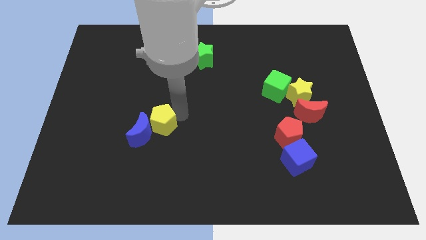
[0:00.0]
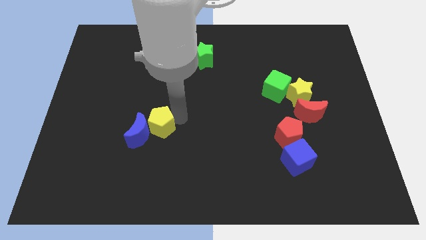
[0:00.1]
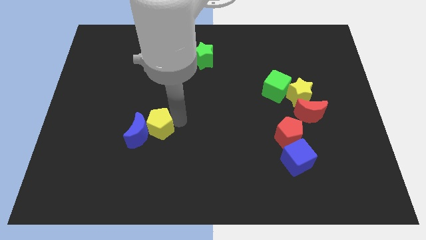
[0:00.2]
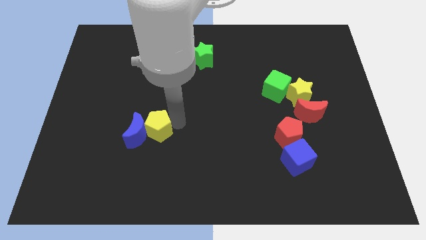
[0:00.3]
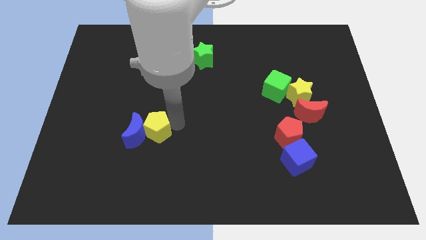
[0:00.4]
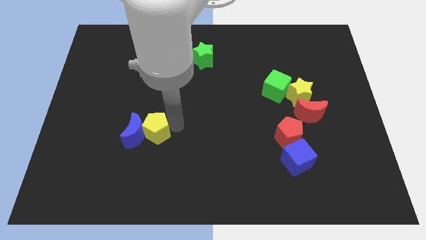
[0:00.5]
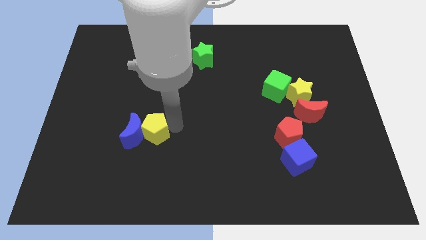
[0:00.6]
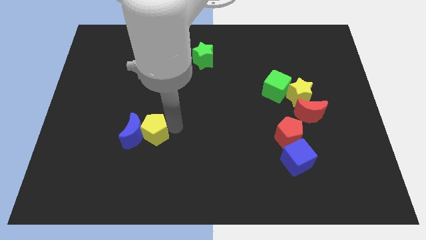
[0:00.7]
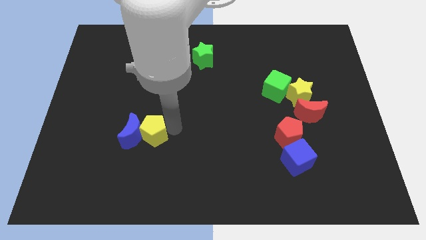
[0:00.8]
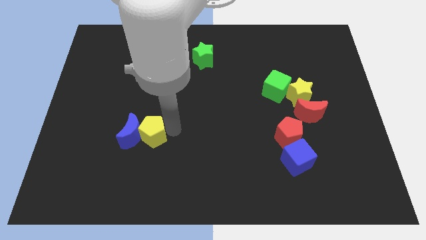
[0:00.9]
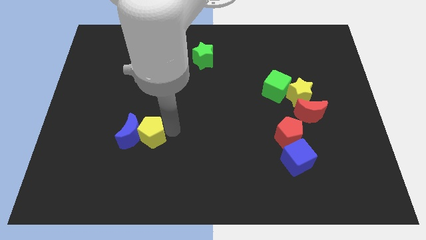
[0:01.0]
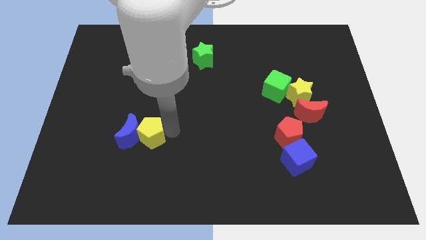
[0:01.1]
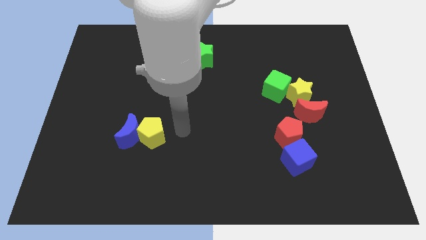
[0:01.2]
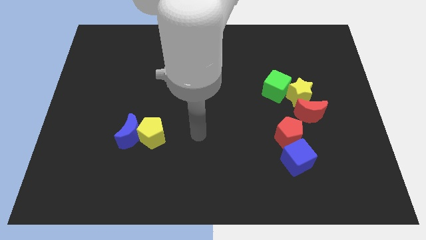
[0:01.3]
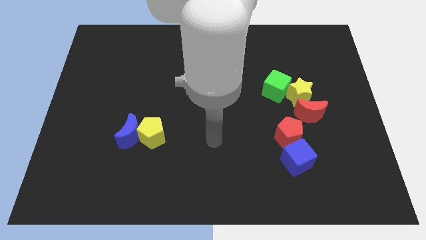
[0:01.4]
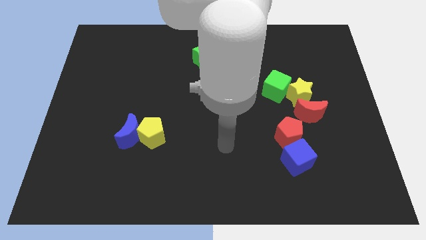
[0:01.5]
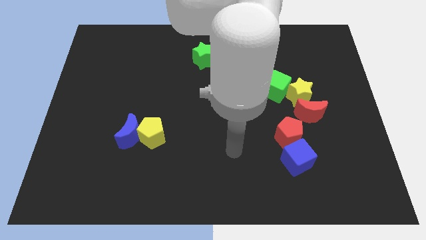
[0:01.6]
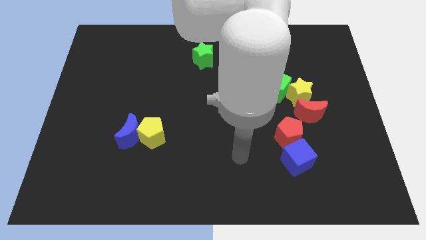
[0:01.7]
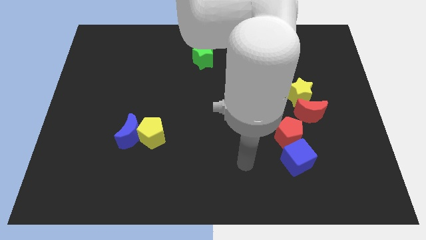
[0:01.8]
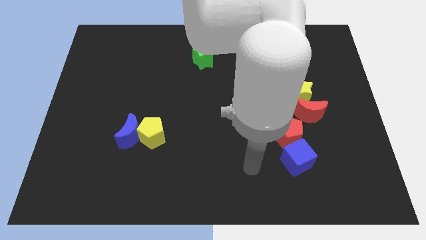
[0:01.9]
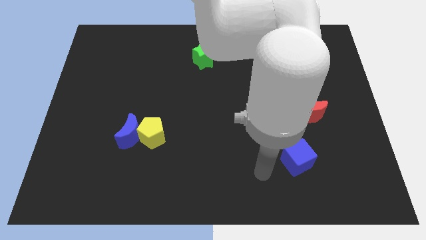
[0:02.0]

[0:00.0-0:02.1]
move the yellow pentagon to the right of the blue crescent

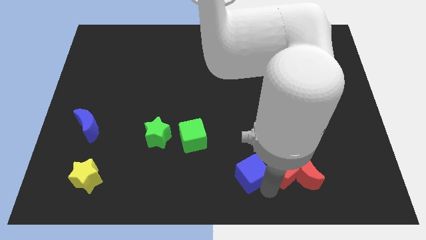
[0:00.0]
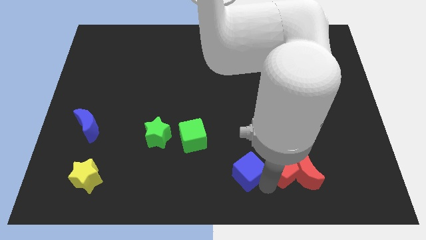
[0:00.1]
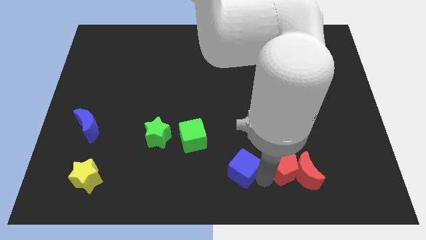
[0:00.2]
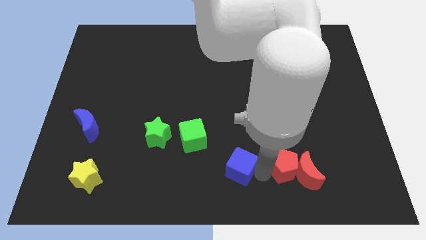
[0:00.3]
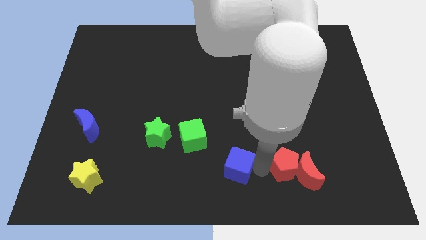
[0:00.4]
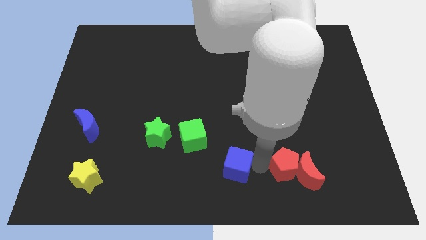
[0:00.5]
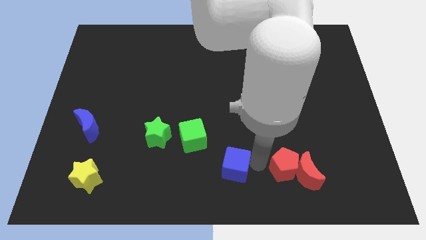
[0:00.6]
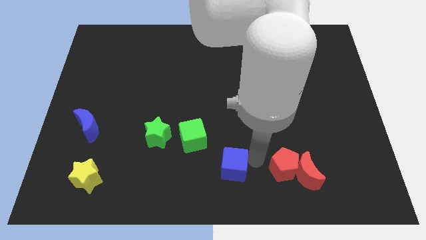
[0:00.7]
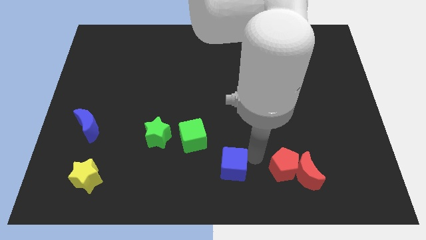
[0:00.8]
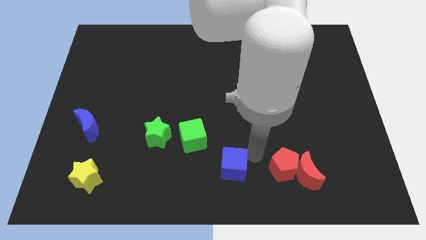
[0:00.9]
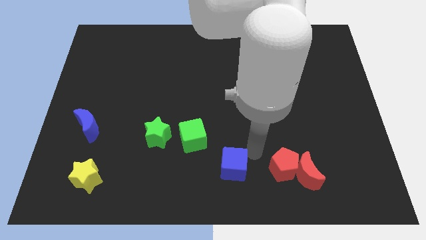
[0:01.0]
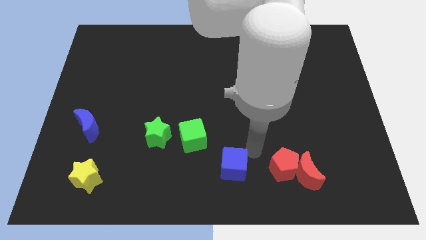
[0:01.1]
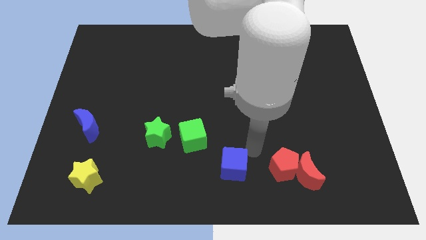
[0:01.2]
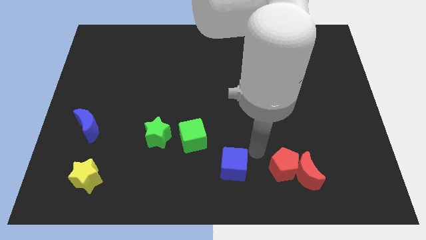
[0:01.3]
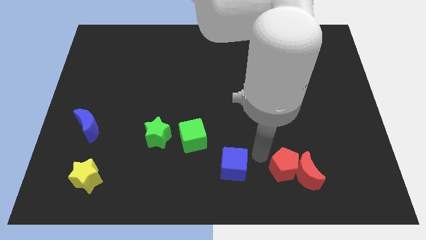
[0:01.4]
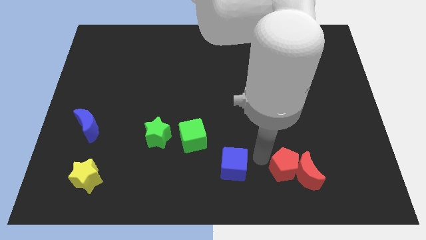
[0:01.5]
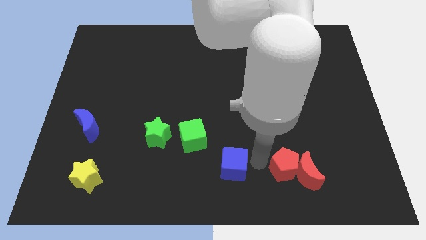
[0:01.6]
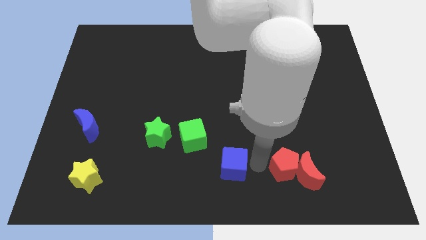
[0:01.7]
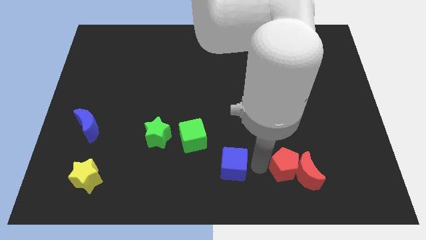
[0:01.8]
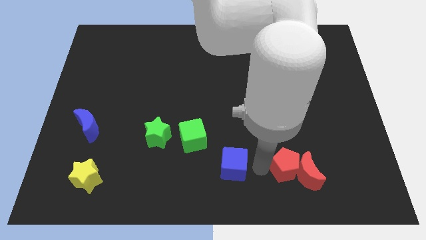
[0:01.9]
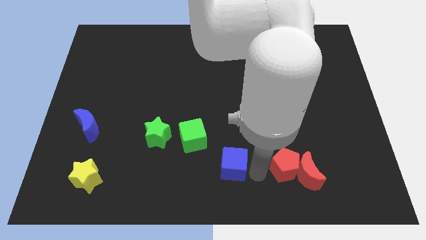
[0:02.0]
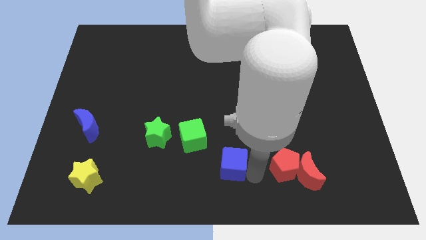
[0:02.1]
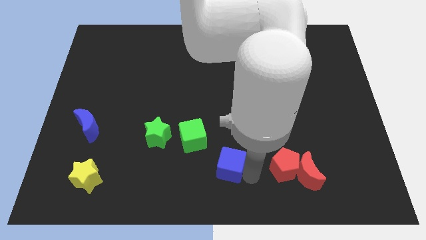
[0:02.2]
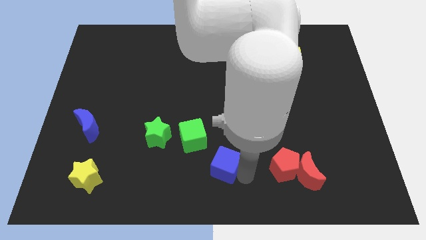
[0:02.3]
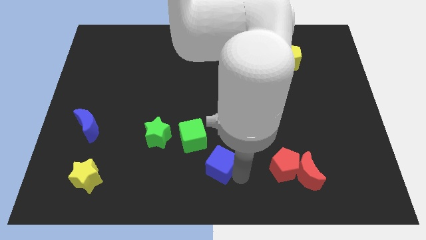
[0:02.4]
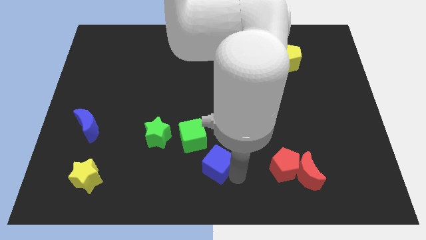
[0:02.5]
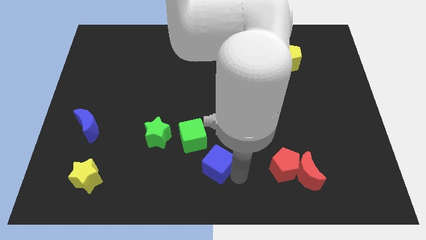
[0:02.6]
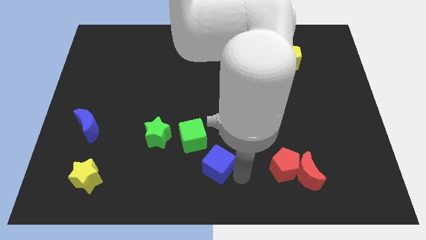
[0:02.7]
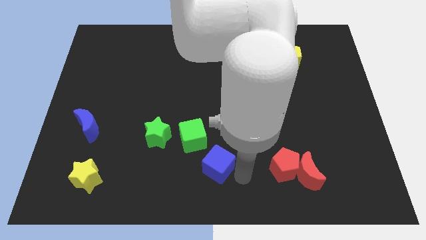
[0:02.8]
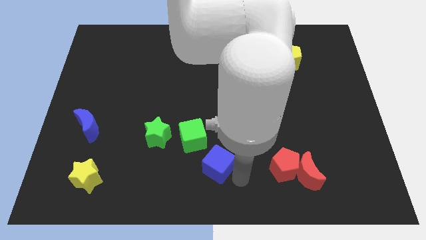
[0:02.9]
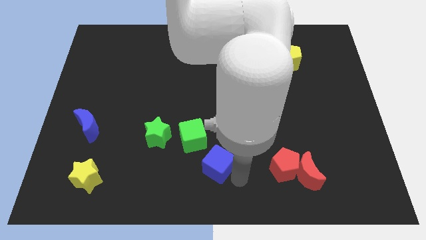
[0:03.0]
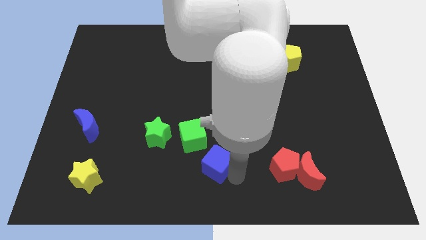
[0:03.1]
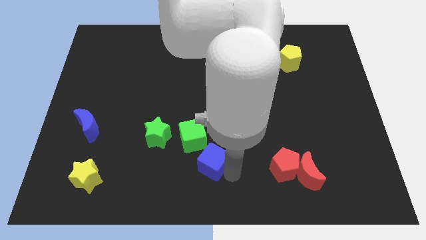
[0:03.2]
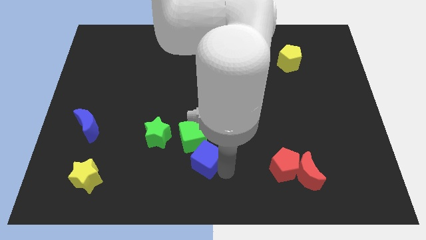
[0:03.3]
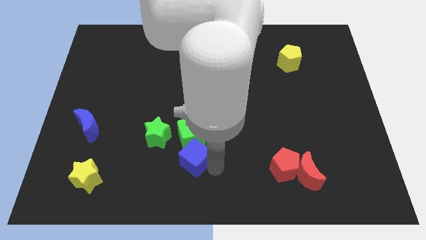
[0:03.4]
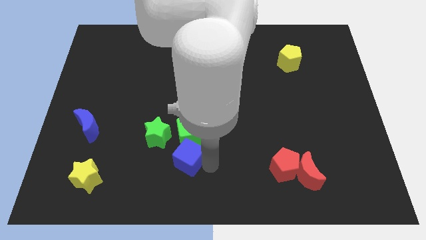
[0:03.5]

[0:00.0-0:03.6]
push the blue cube below the green cube

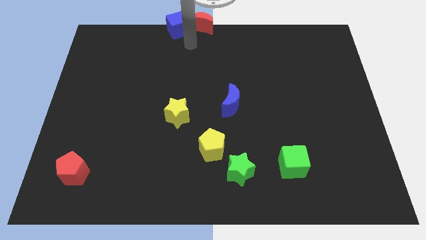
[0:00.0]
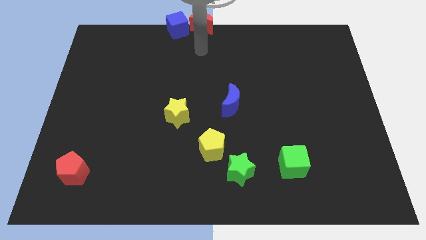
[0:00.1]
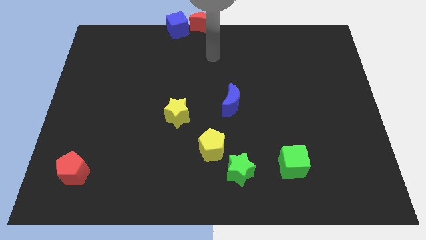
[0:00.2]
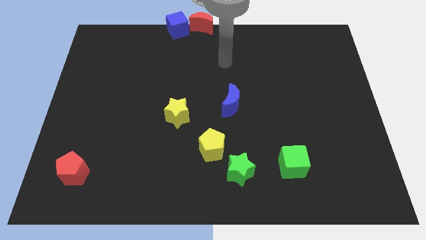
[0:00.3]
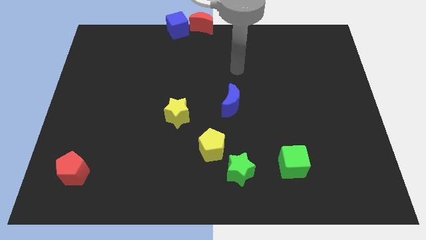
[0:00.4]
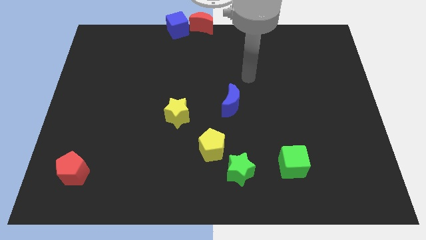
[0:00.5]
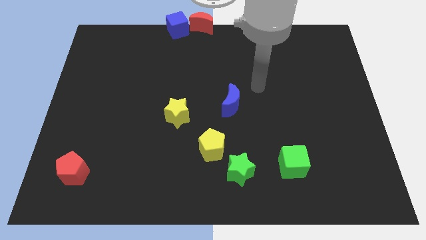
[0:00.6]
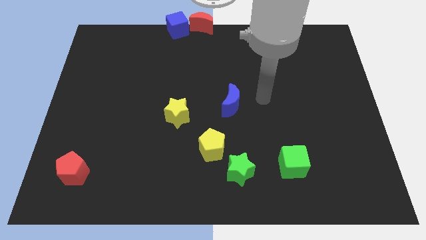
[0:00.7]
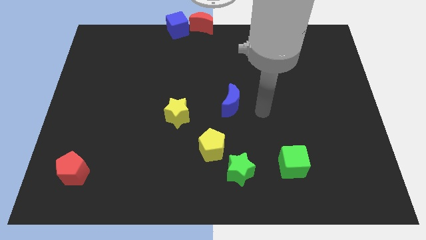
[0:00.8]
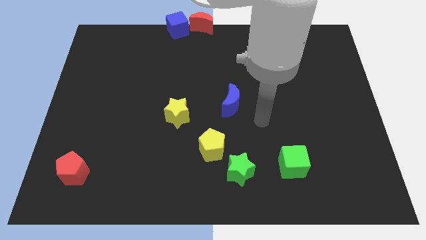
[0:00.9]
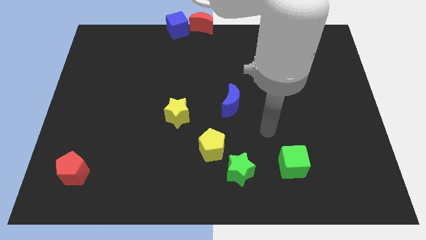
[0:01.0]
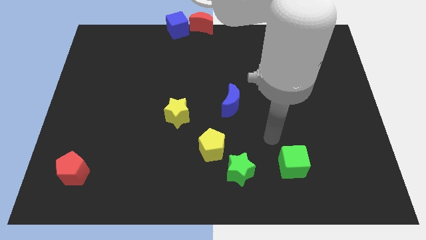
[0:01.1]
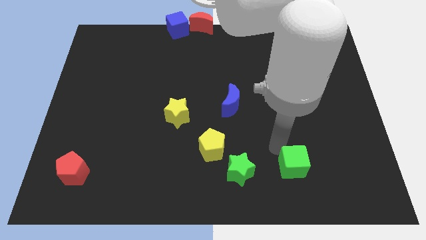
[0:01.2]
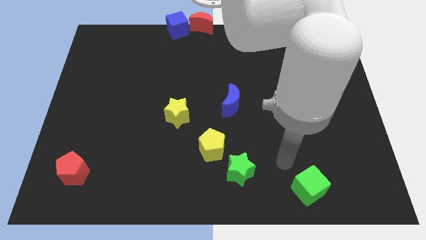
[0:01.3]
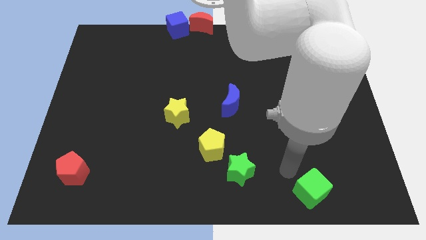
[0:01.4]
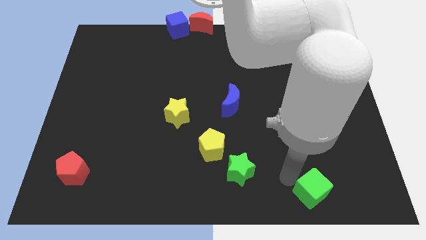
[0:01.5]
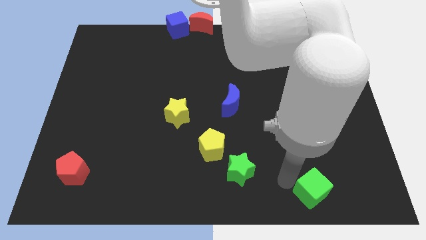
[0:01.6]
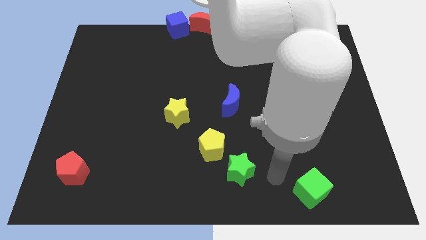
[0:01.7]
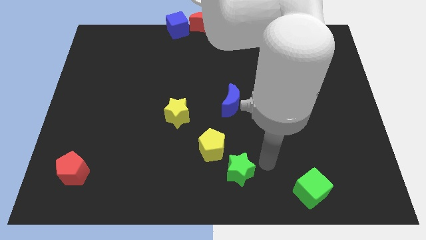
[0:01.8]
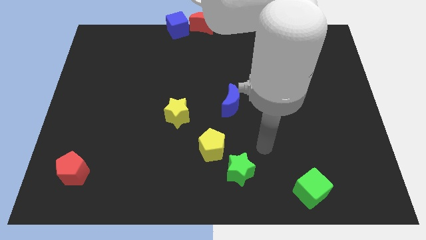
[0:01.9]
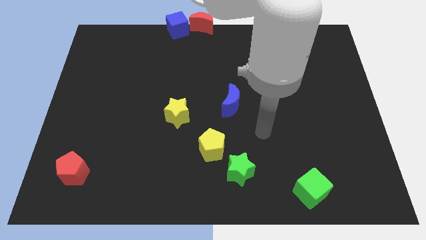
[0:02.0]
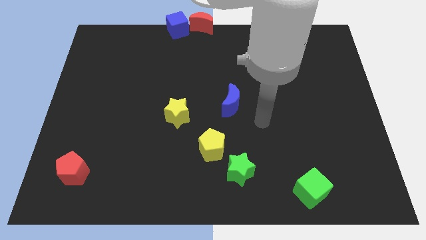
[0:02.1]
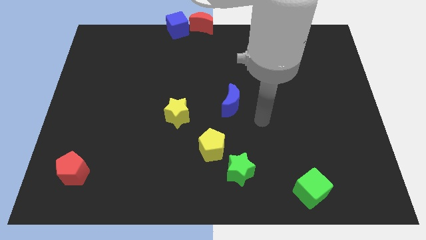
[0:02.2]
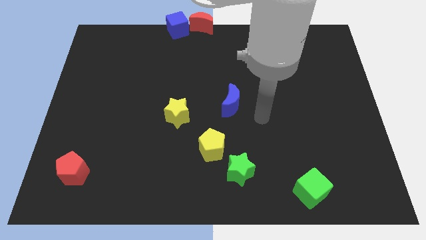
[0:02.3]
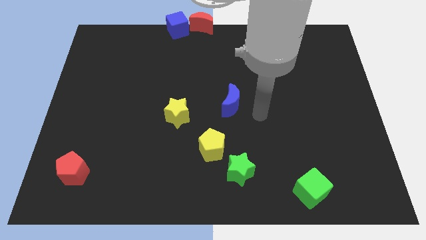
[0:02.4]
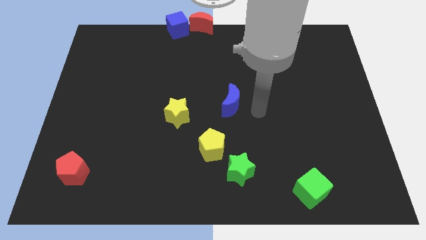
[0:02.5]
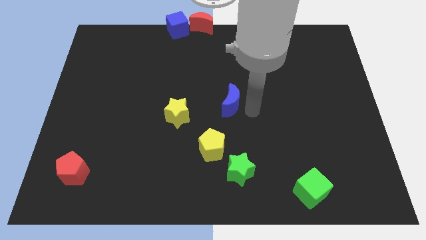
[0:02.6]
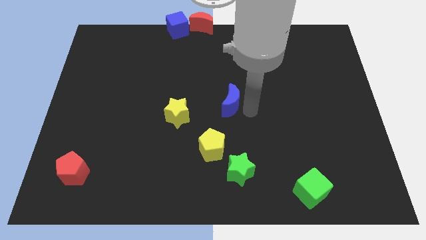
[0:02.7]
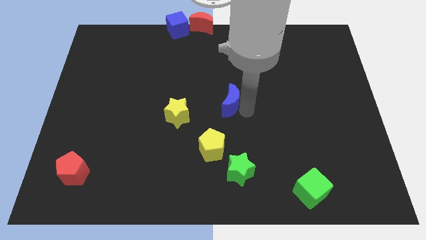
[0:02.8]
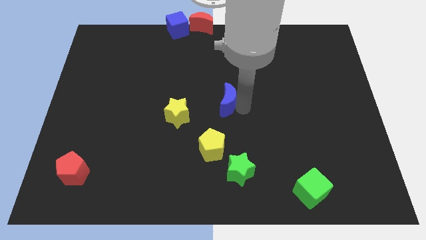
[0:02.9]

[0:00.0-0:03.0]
push the green cube towards the bottom

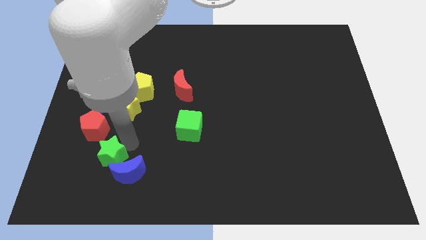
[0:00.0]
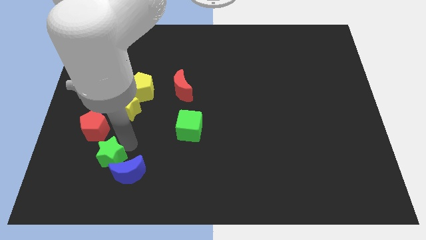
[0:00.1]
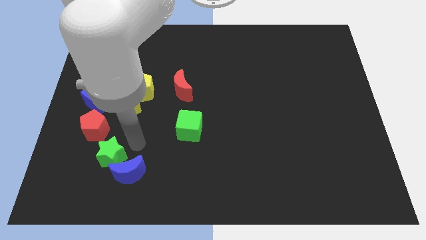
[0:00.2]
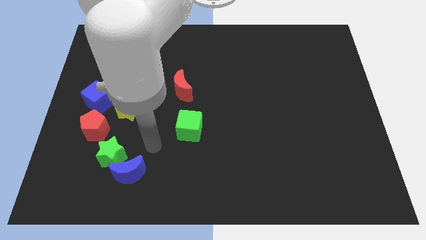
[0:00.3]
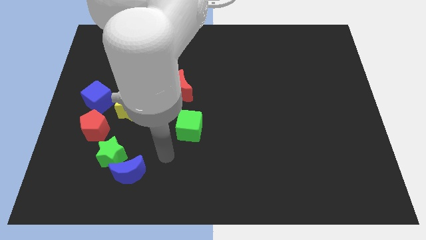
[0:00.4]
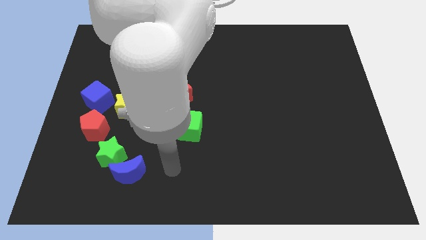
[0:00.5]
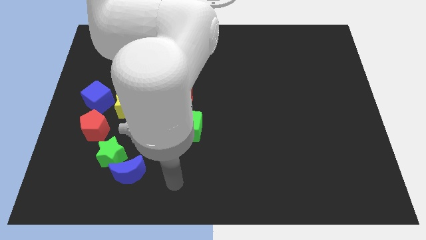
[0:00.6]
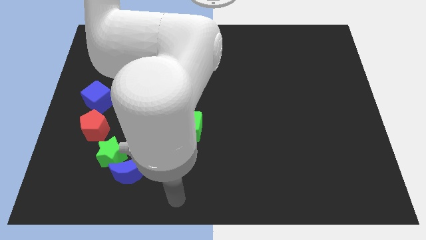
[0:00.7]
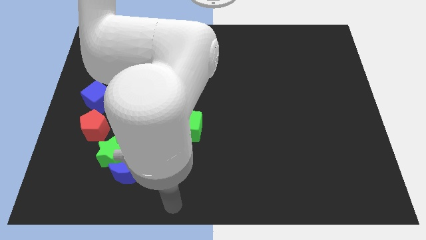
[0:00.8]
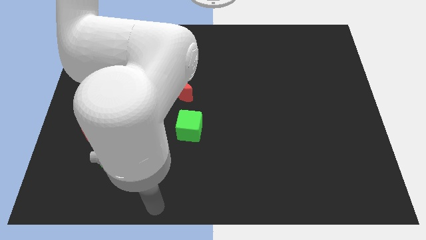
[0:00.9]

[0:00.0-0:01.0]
place your arm to the bottom center of the board
